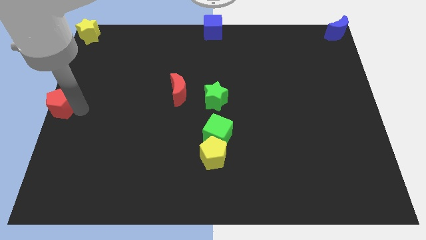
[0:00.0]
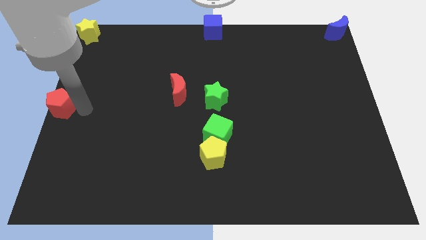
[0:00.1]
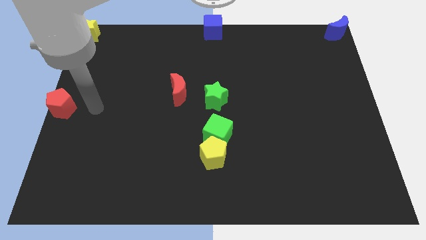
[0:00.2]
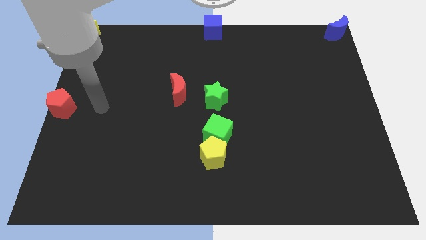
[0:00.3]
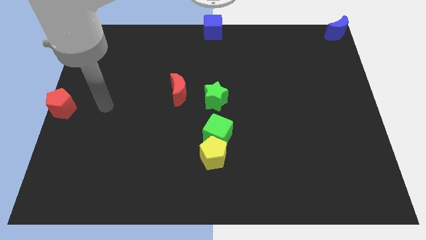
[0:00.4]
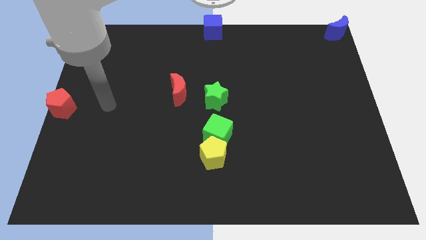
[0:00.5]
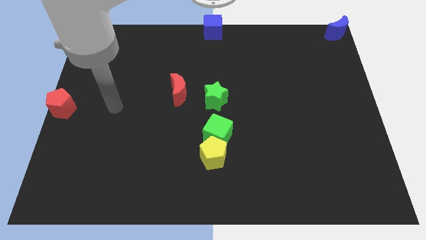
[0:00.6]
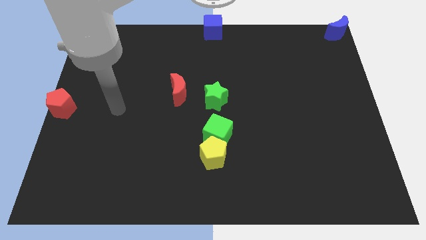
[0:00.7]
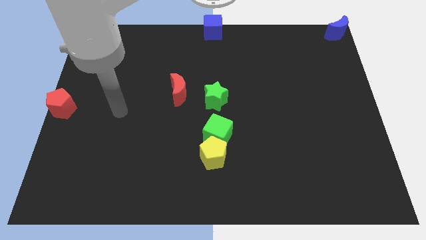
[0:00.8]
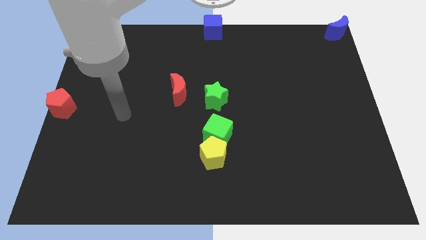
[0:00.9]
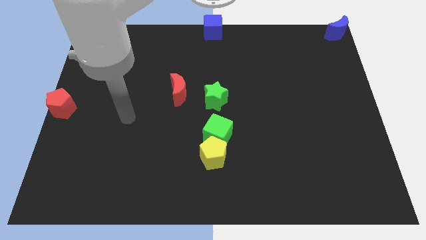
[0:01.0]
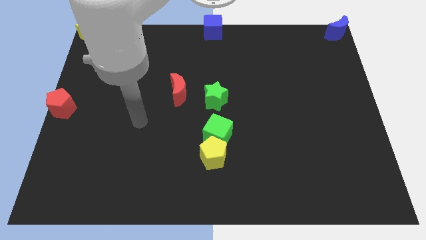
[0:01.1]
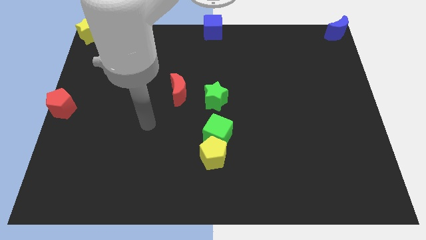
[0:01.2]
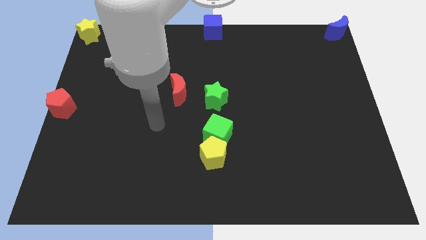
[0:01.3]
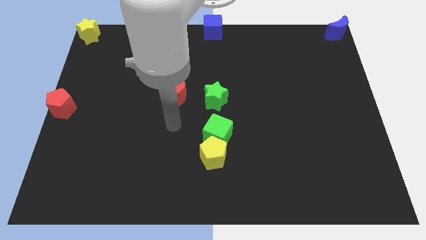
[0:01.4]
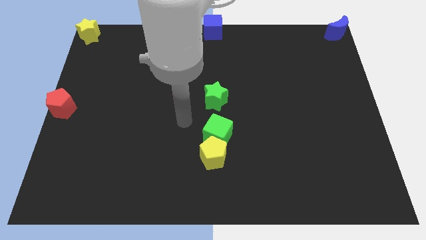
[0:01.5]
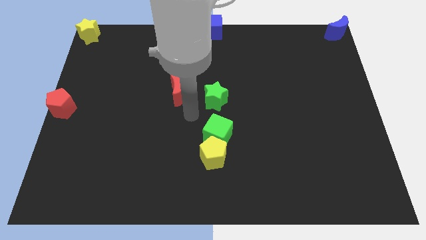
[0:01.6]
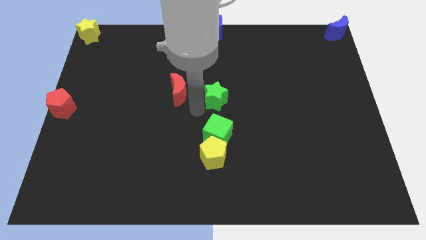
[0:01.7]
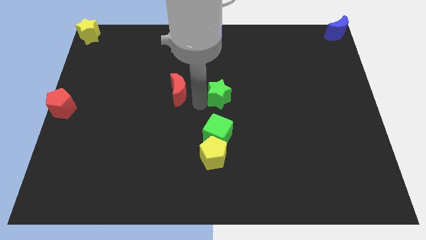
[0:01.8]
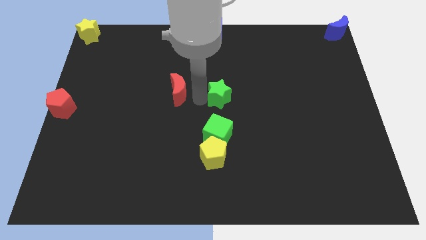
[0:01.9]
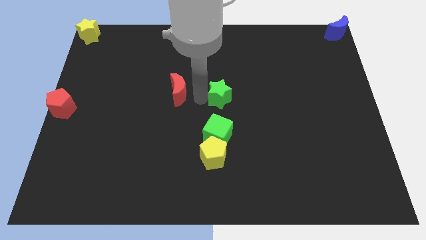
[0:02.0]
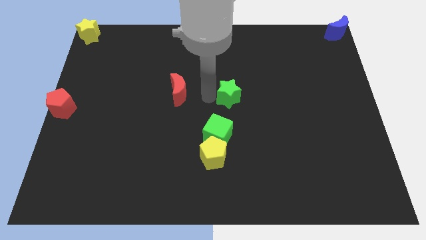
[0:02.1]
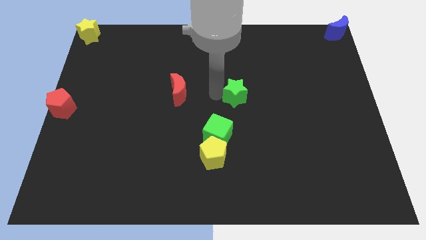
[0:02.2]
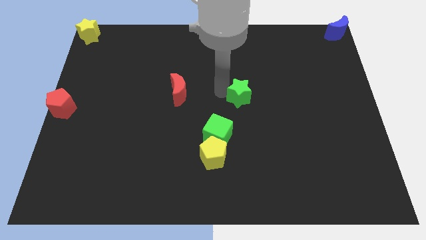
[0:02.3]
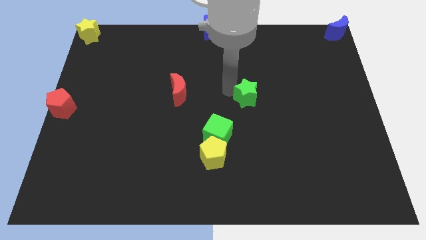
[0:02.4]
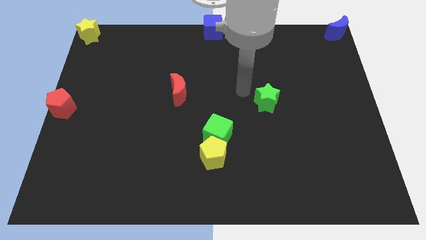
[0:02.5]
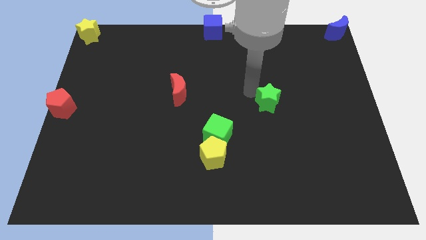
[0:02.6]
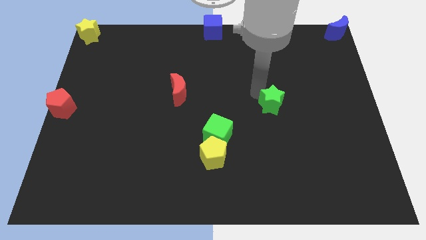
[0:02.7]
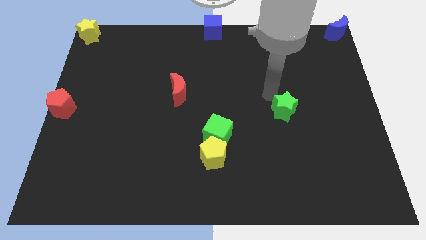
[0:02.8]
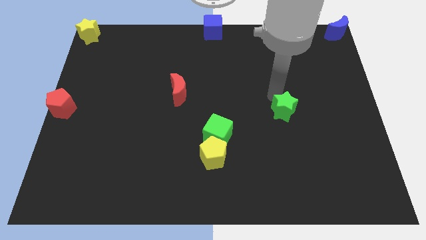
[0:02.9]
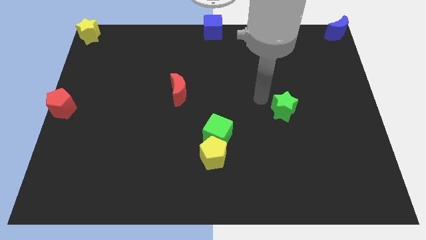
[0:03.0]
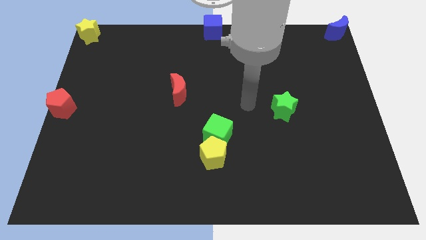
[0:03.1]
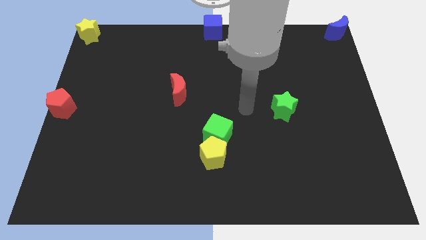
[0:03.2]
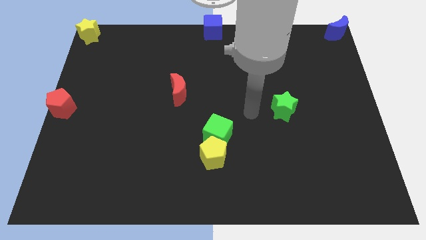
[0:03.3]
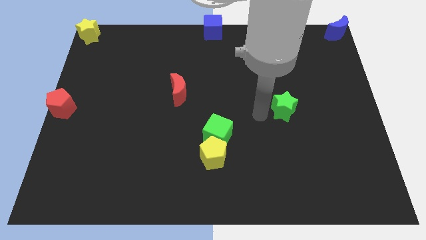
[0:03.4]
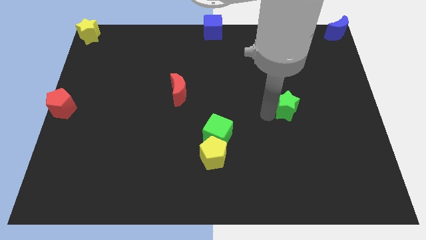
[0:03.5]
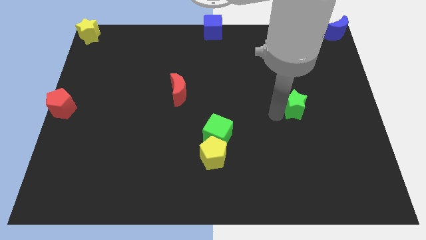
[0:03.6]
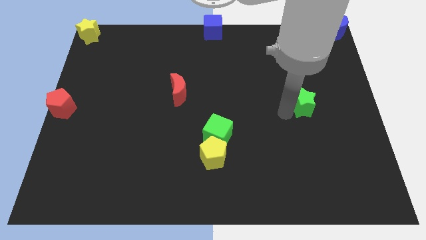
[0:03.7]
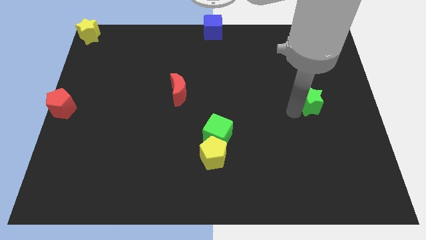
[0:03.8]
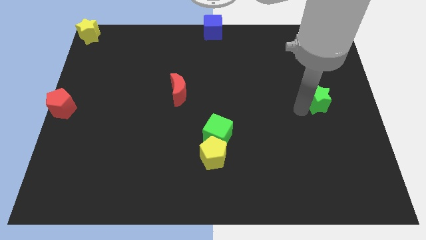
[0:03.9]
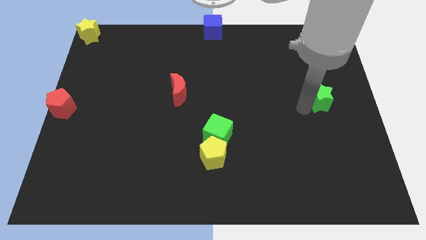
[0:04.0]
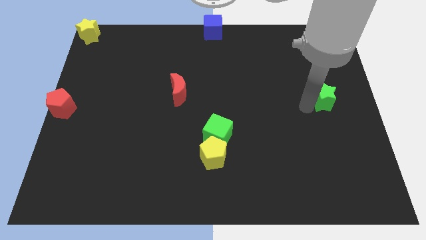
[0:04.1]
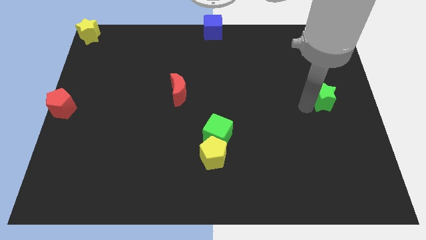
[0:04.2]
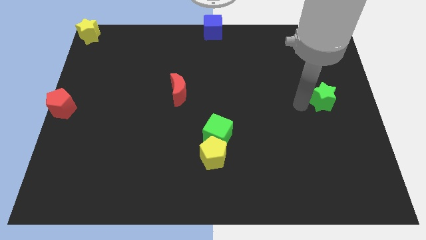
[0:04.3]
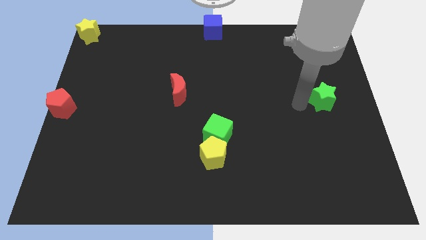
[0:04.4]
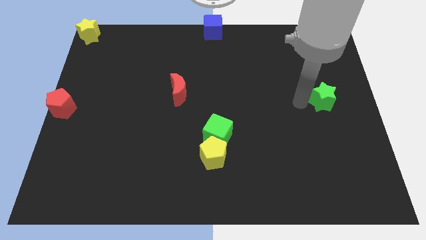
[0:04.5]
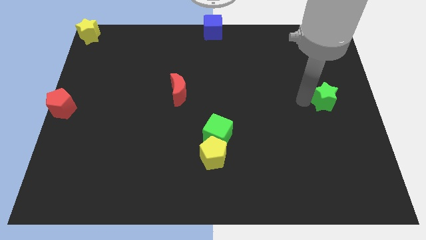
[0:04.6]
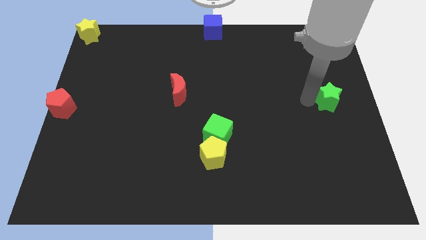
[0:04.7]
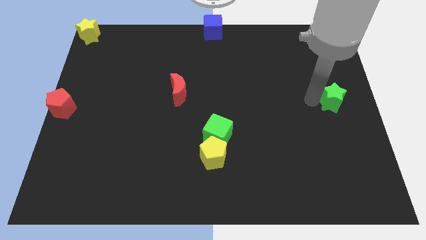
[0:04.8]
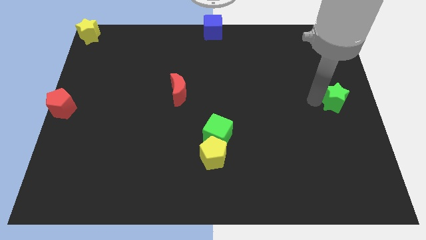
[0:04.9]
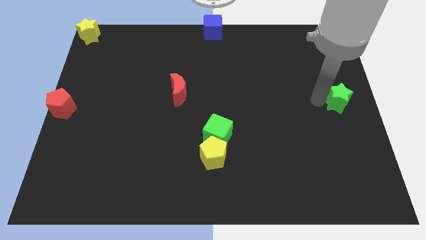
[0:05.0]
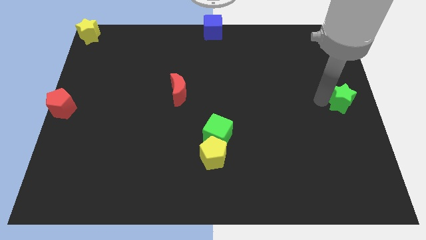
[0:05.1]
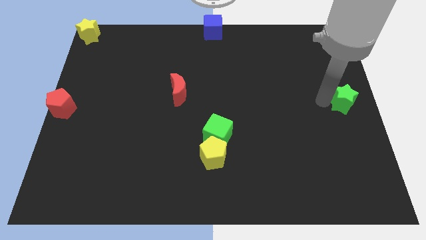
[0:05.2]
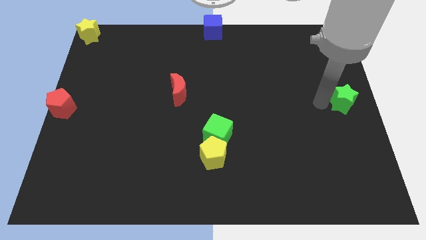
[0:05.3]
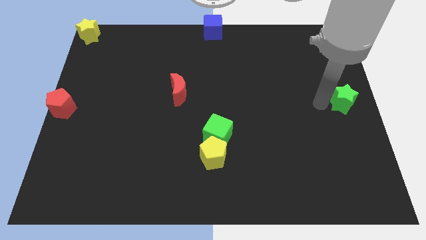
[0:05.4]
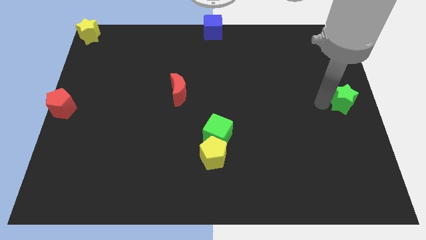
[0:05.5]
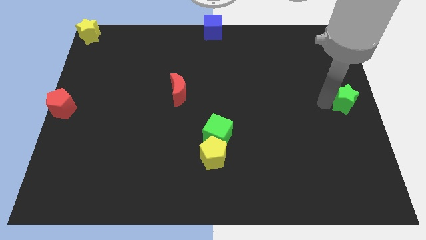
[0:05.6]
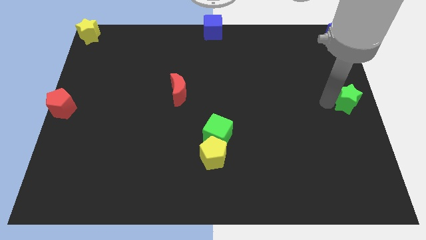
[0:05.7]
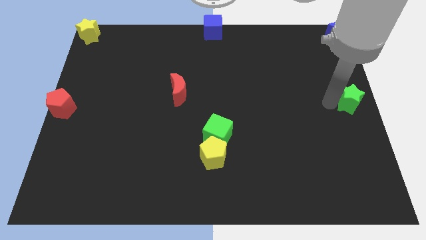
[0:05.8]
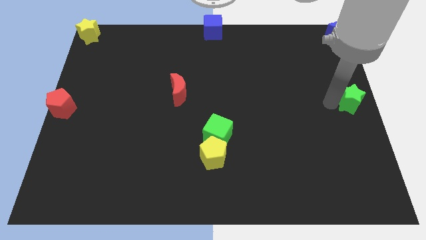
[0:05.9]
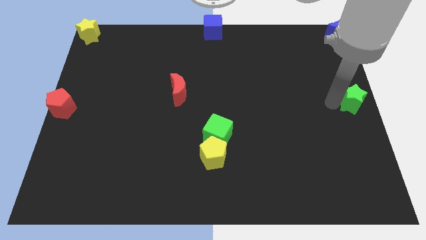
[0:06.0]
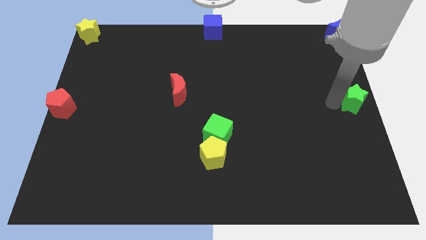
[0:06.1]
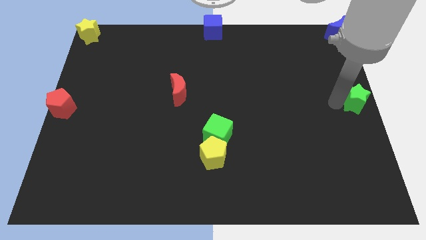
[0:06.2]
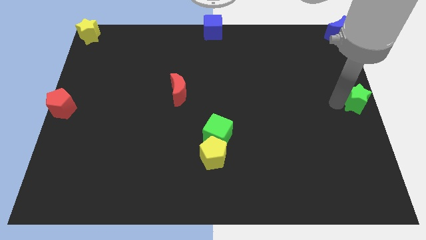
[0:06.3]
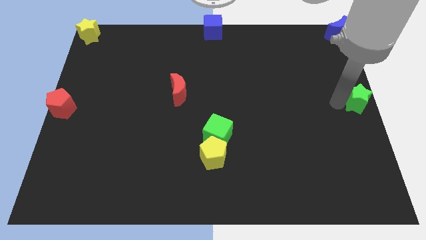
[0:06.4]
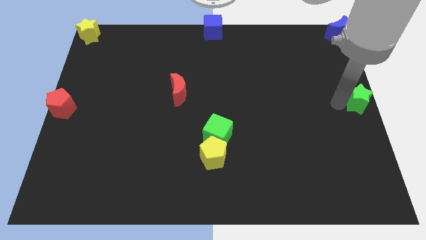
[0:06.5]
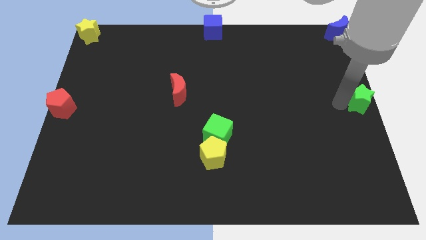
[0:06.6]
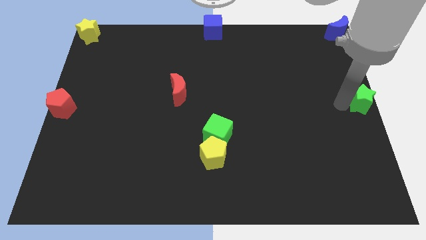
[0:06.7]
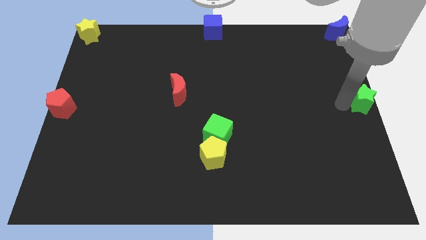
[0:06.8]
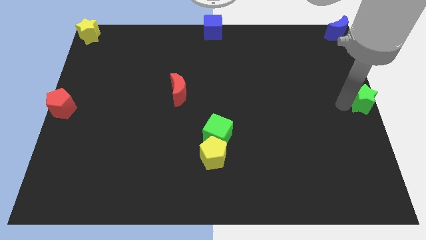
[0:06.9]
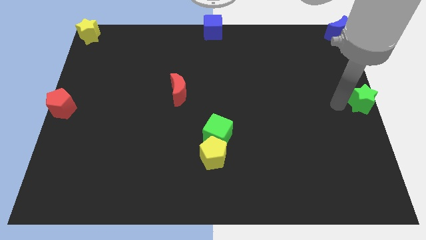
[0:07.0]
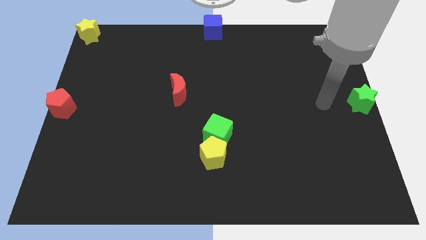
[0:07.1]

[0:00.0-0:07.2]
slide the green star to the center right of the table

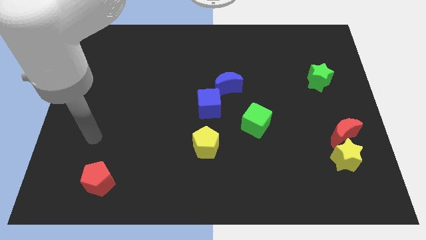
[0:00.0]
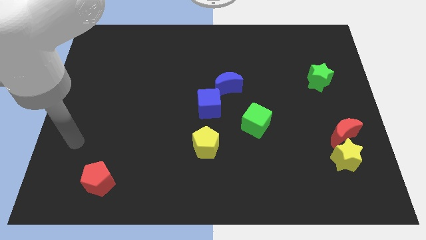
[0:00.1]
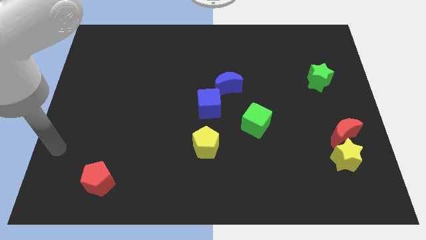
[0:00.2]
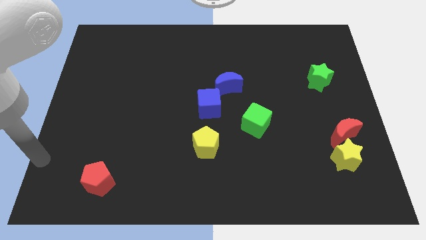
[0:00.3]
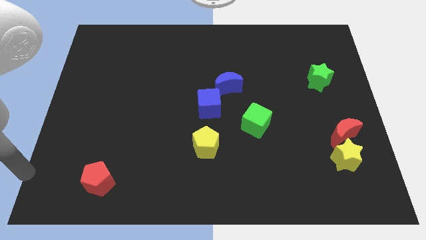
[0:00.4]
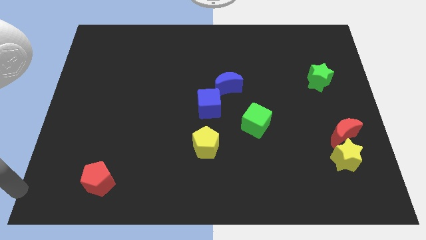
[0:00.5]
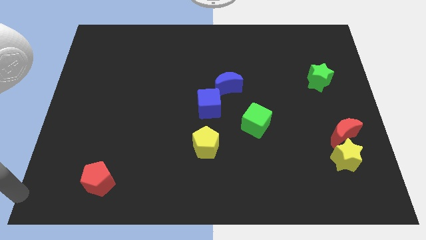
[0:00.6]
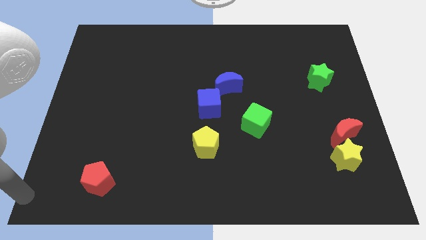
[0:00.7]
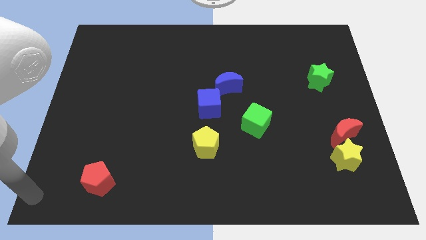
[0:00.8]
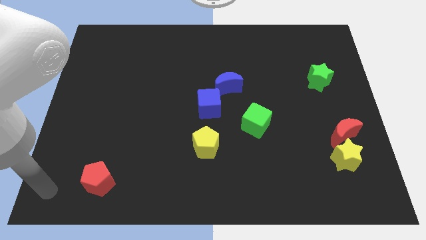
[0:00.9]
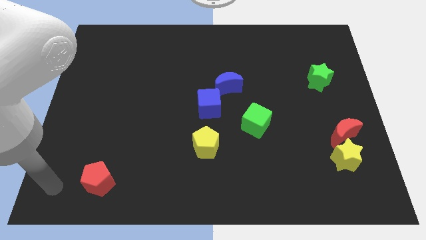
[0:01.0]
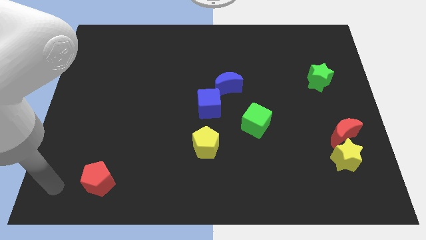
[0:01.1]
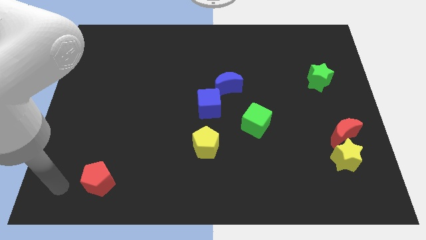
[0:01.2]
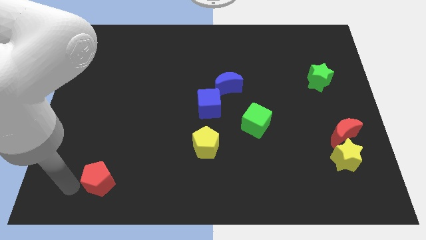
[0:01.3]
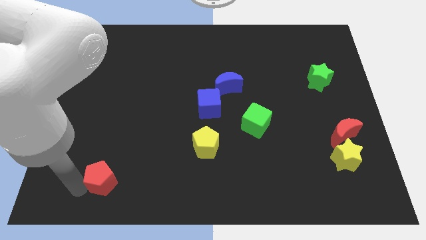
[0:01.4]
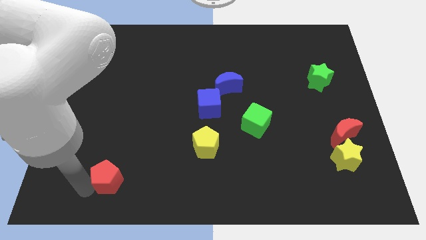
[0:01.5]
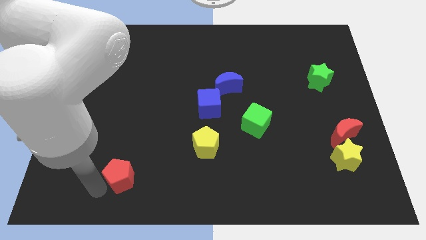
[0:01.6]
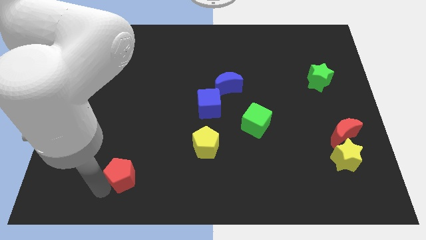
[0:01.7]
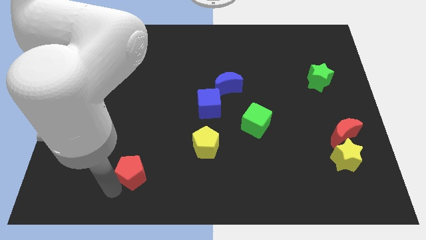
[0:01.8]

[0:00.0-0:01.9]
push the red pentagon towards the yellow pentagon
